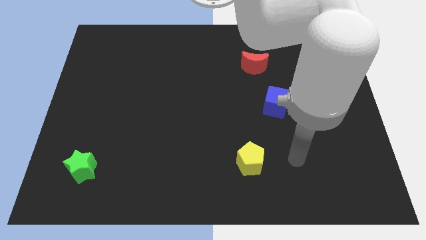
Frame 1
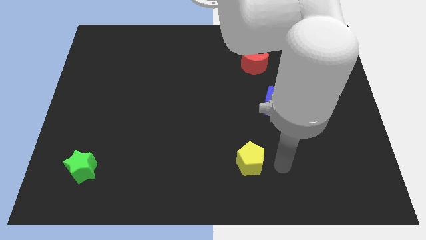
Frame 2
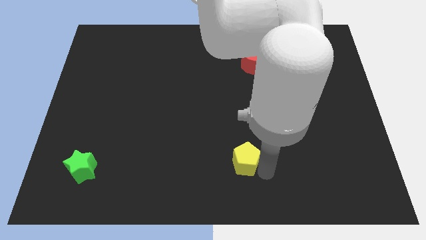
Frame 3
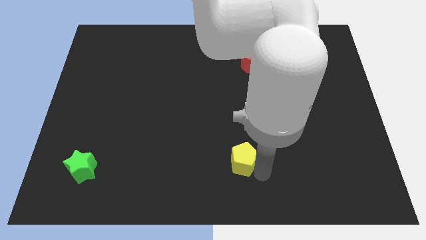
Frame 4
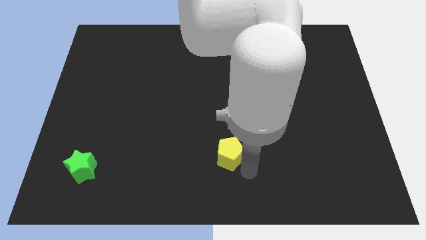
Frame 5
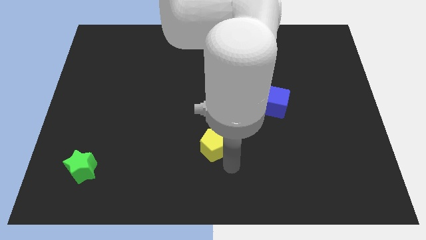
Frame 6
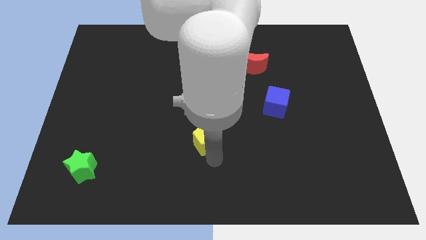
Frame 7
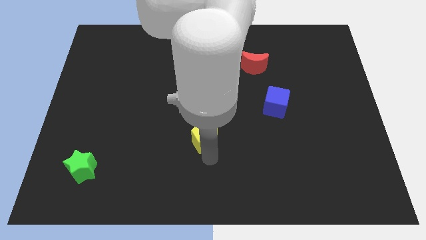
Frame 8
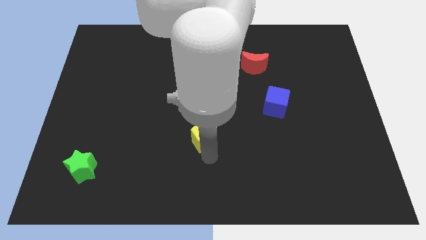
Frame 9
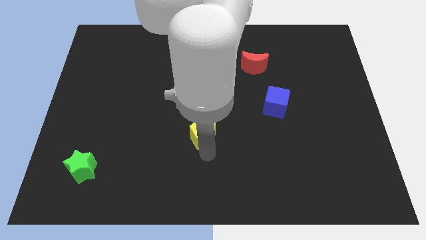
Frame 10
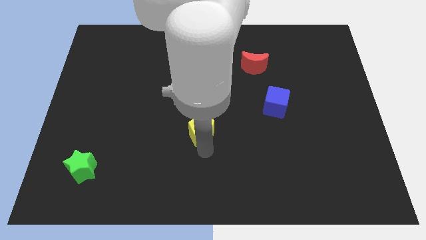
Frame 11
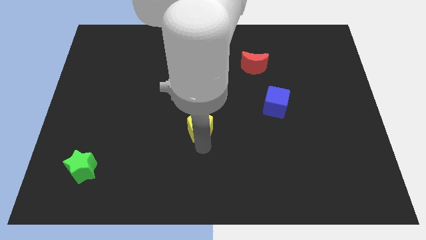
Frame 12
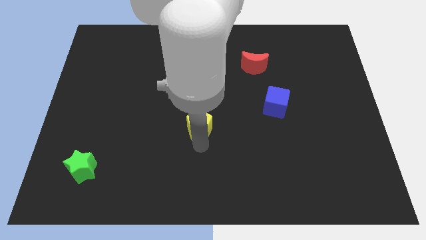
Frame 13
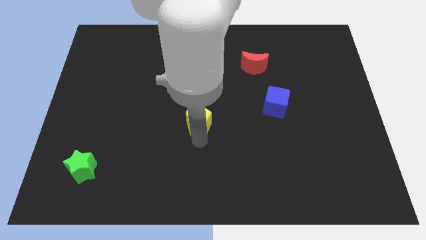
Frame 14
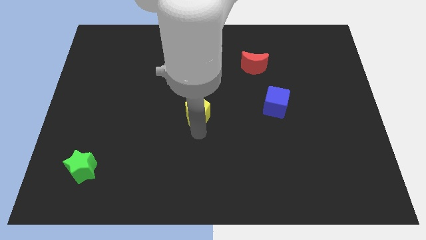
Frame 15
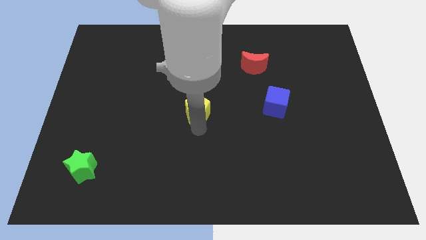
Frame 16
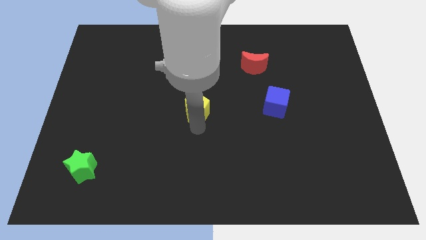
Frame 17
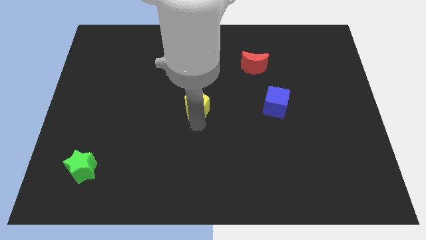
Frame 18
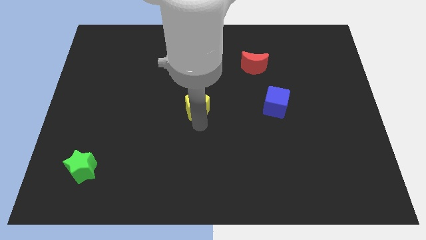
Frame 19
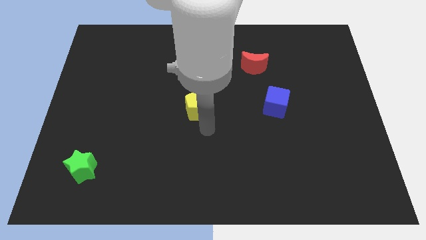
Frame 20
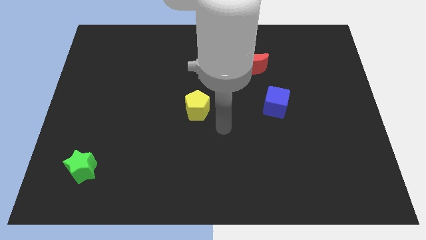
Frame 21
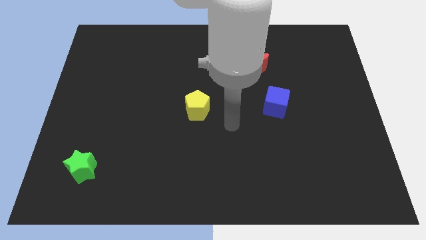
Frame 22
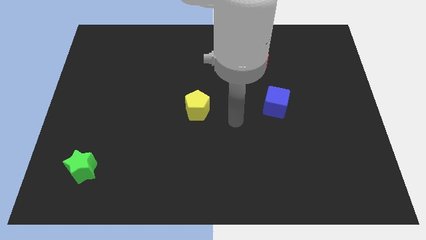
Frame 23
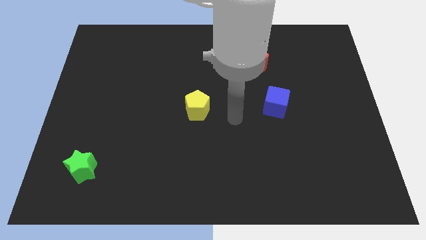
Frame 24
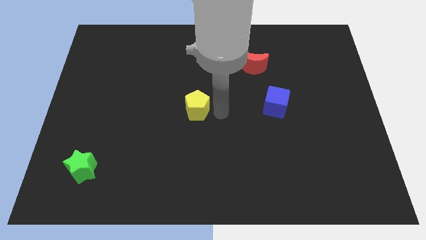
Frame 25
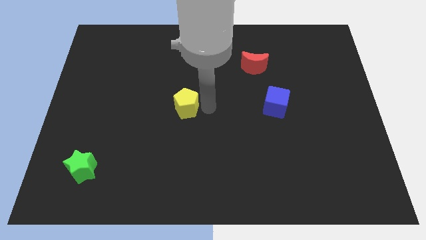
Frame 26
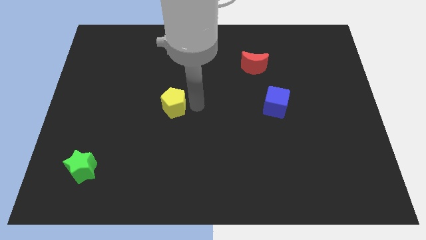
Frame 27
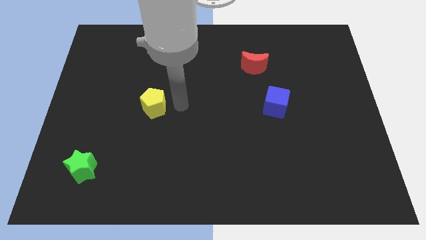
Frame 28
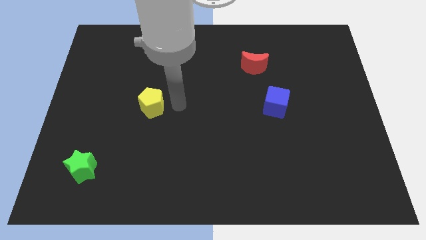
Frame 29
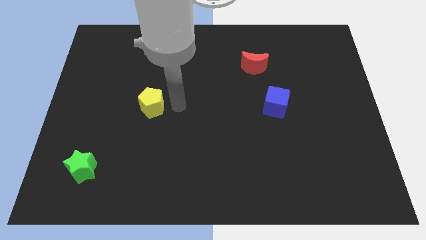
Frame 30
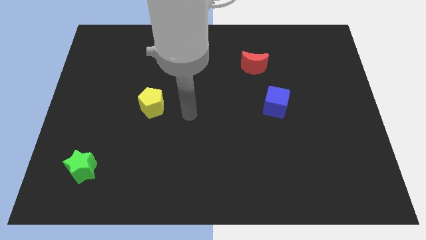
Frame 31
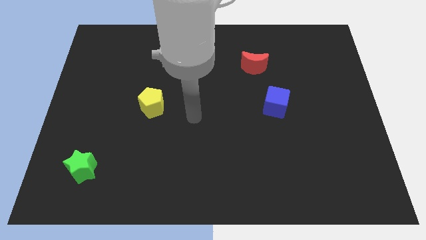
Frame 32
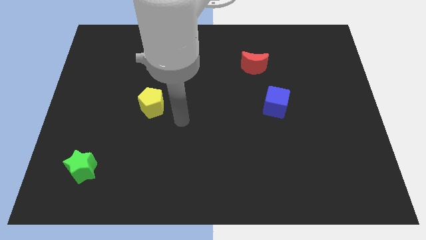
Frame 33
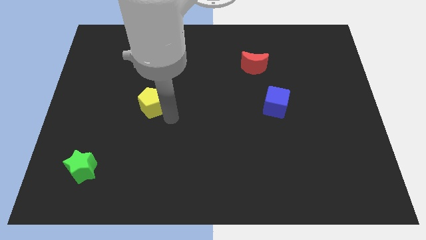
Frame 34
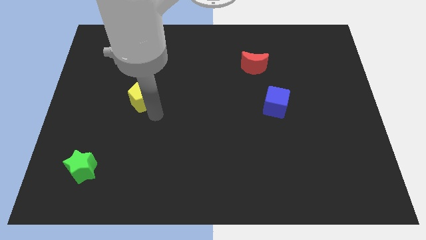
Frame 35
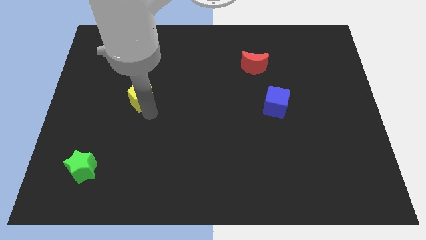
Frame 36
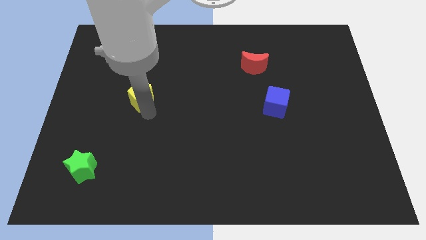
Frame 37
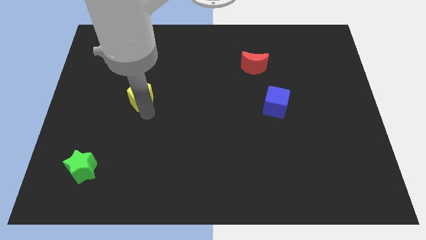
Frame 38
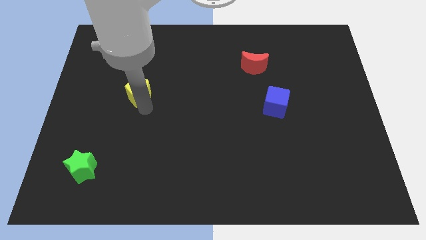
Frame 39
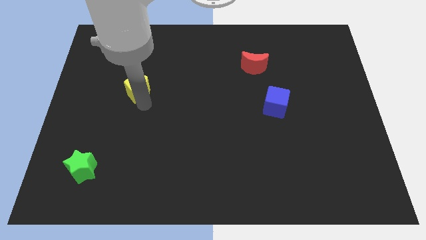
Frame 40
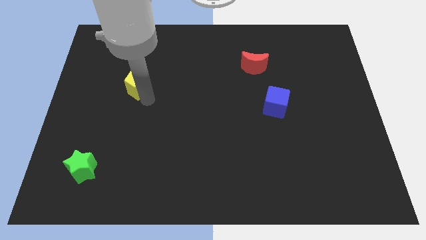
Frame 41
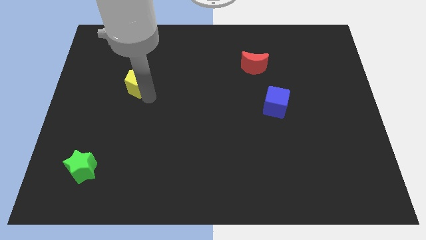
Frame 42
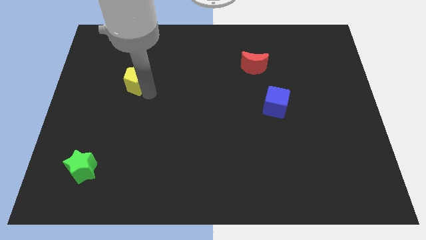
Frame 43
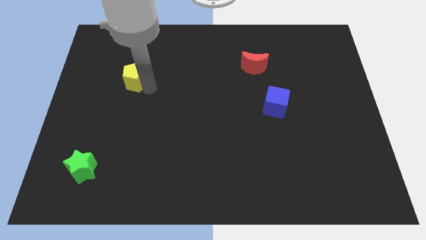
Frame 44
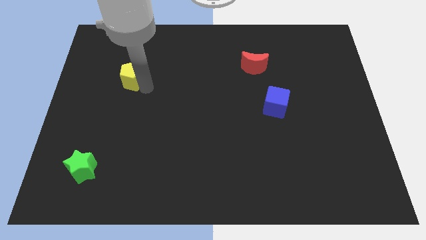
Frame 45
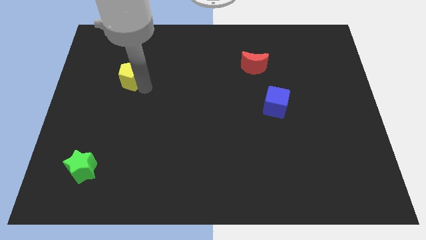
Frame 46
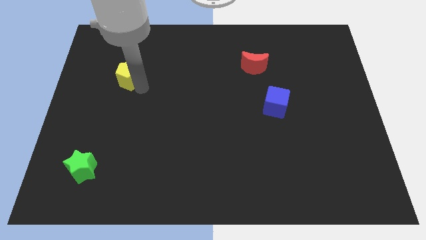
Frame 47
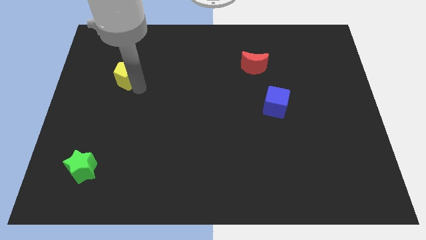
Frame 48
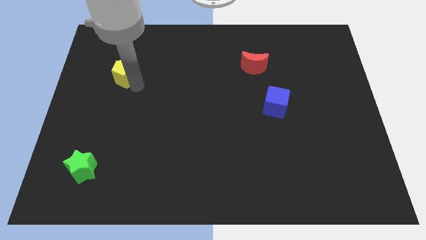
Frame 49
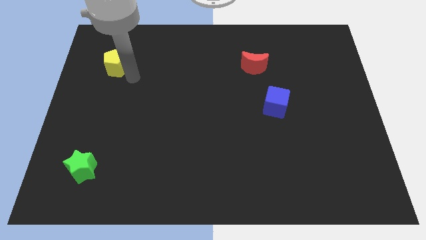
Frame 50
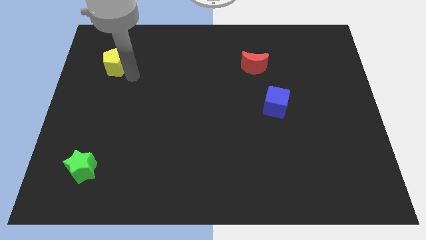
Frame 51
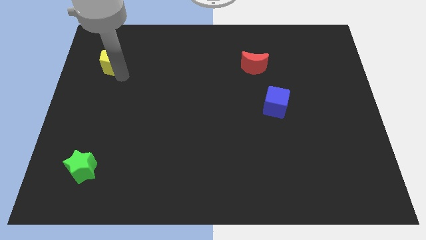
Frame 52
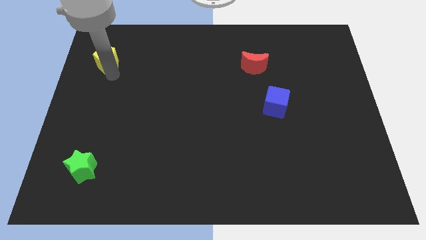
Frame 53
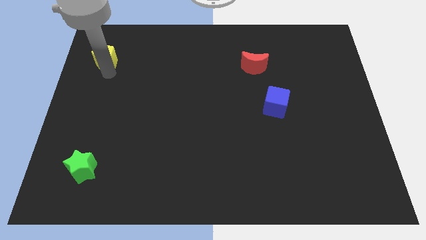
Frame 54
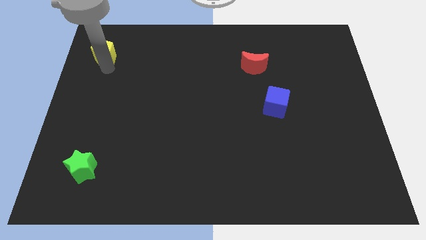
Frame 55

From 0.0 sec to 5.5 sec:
place the yellow block vertically above the green star

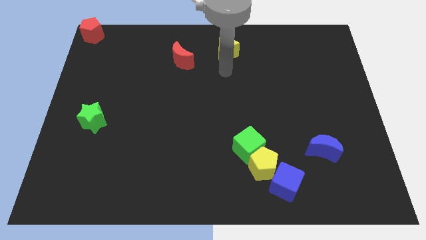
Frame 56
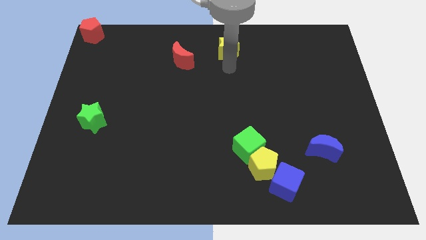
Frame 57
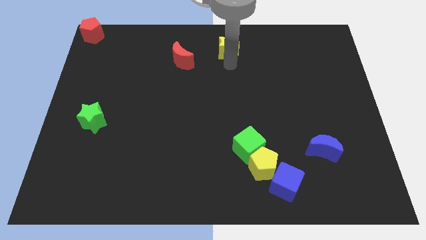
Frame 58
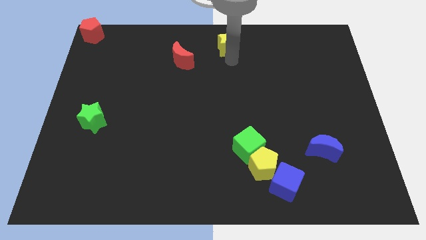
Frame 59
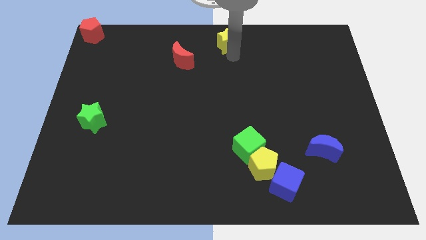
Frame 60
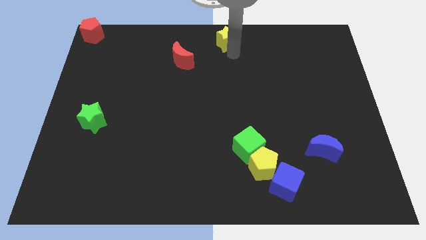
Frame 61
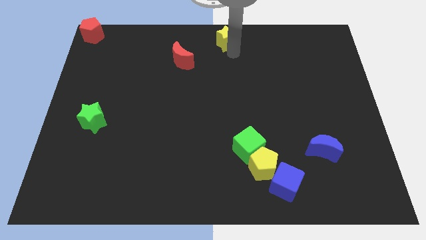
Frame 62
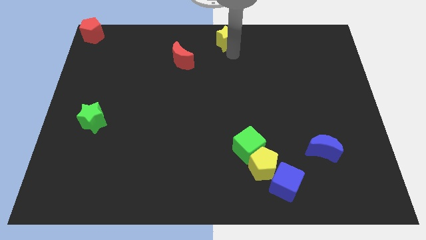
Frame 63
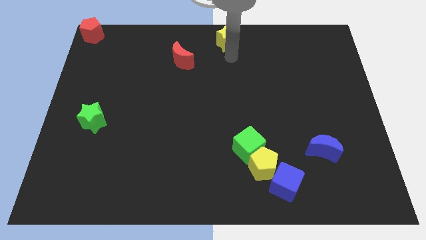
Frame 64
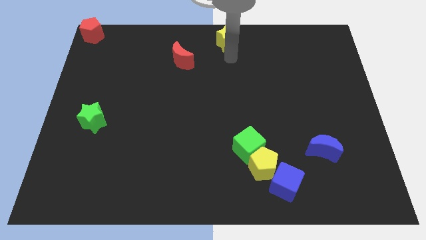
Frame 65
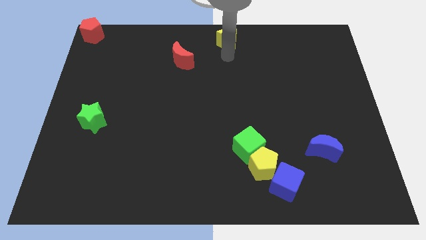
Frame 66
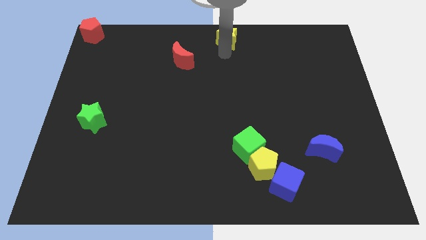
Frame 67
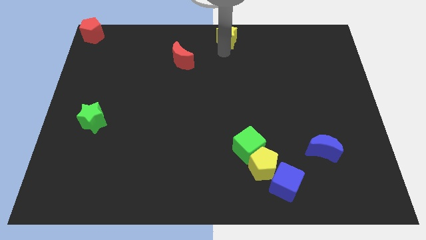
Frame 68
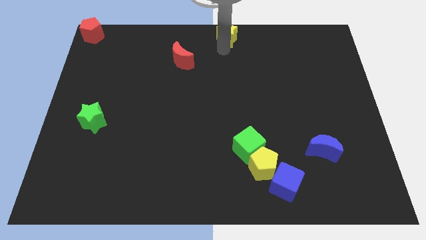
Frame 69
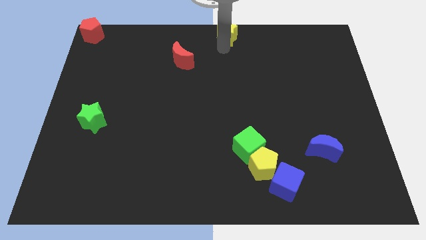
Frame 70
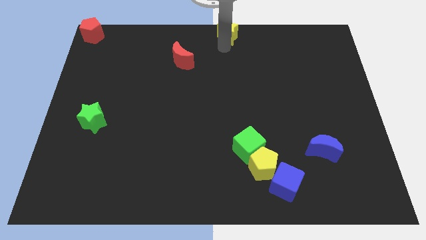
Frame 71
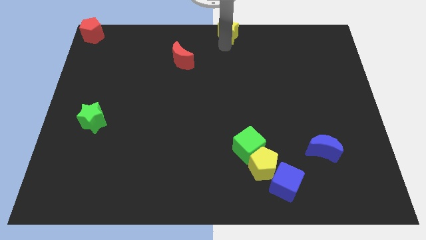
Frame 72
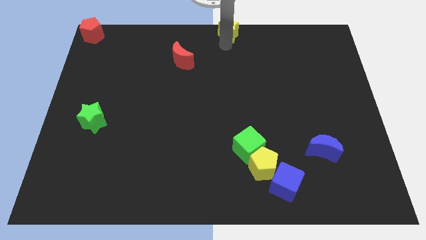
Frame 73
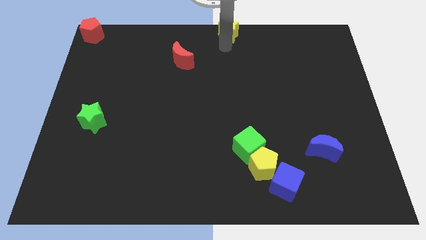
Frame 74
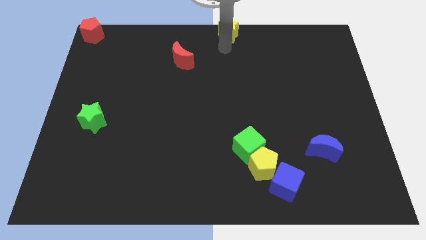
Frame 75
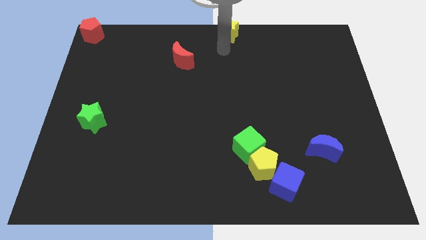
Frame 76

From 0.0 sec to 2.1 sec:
move the yellow star to the top center of the board

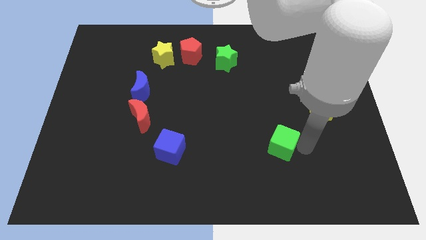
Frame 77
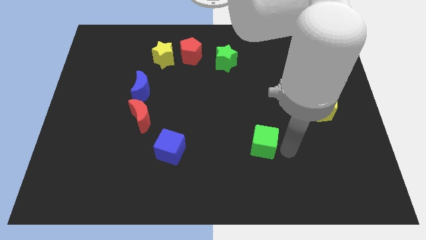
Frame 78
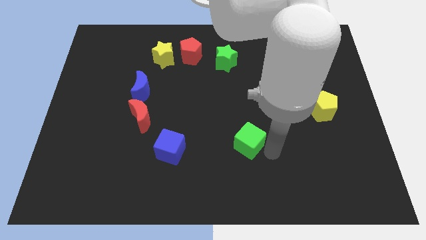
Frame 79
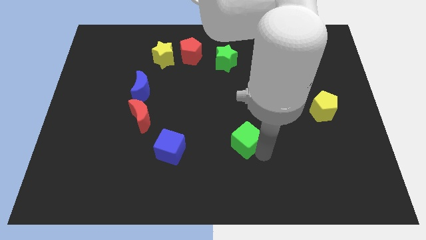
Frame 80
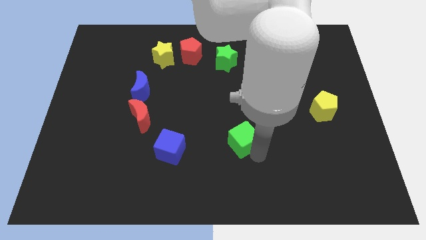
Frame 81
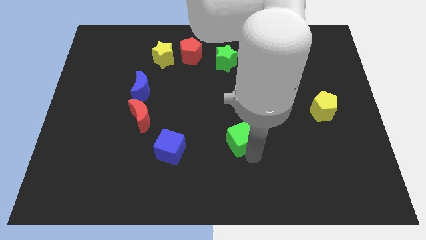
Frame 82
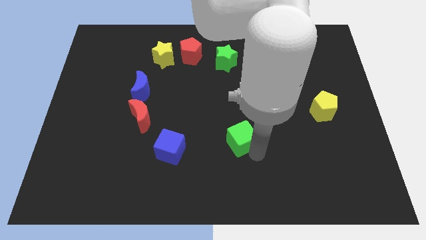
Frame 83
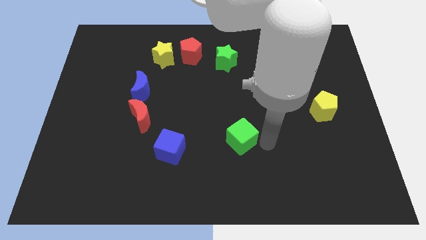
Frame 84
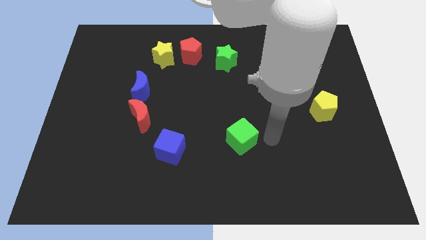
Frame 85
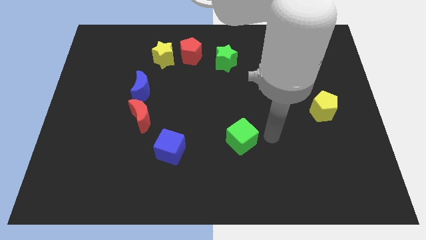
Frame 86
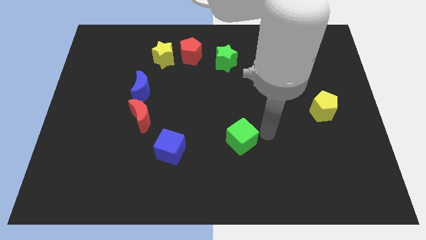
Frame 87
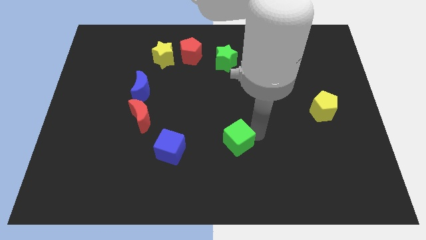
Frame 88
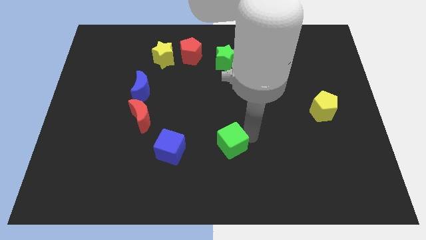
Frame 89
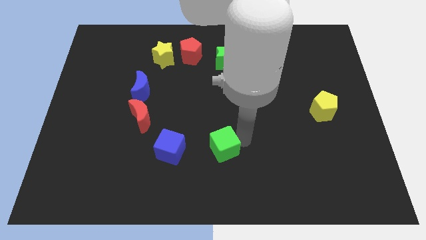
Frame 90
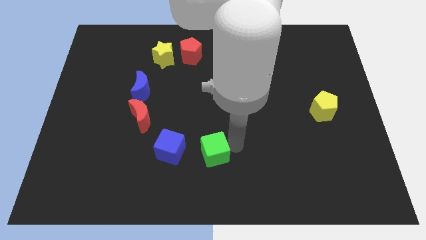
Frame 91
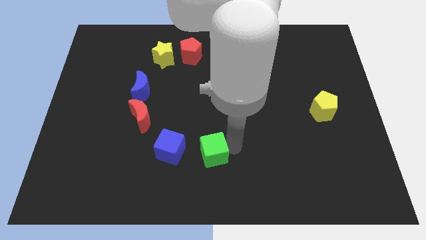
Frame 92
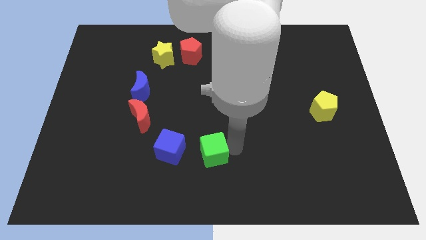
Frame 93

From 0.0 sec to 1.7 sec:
place green cube on the right side of the blue cube
